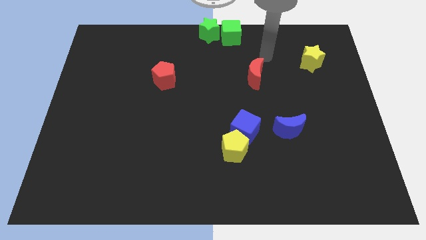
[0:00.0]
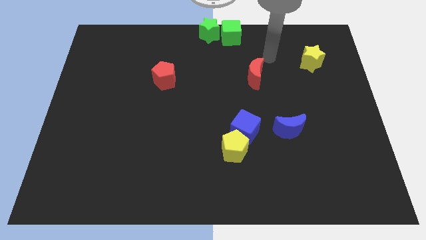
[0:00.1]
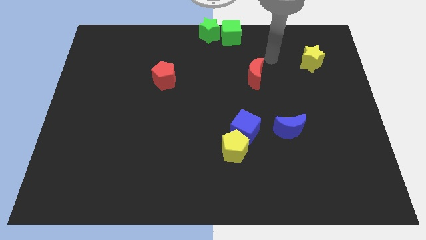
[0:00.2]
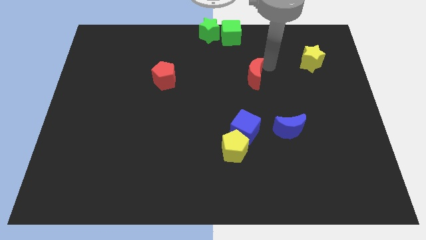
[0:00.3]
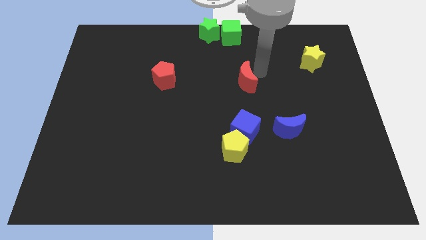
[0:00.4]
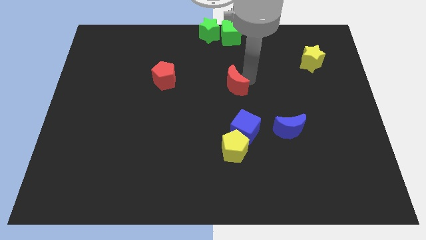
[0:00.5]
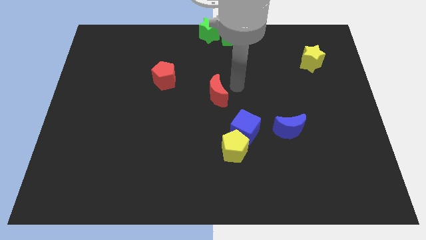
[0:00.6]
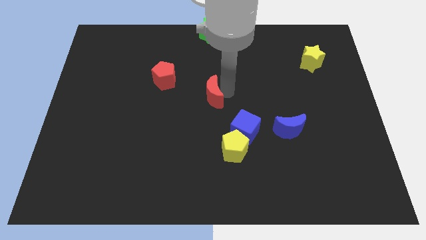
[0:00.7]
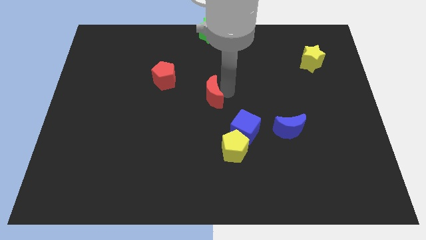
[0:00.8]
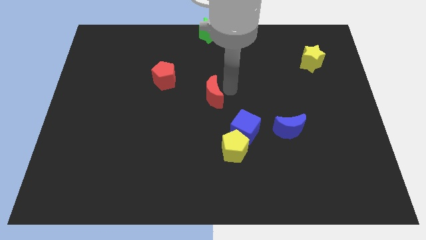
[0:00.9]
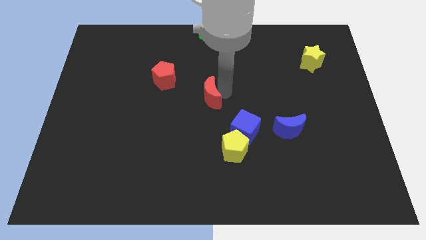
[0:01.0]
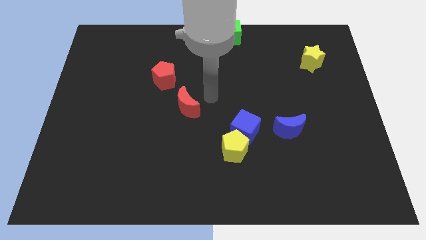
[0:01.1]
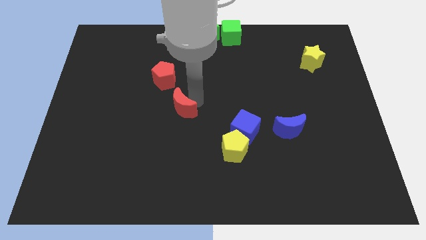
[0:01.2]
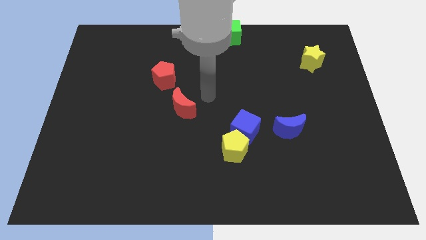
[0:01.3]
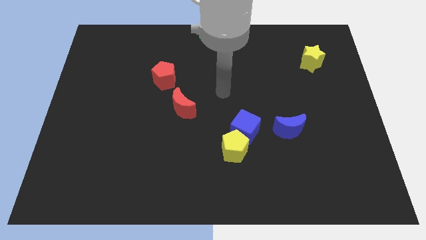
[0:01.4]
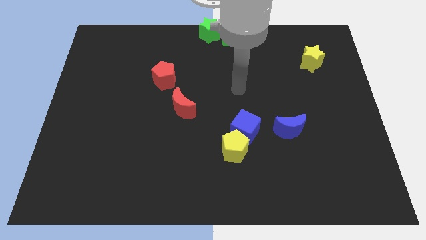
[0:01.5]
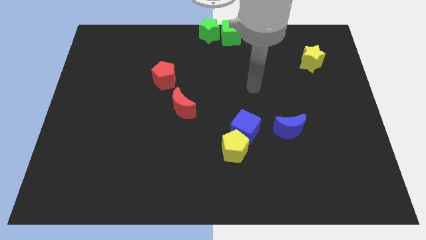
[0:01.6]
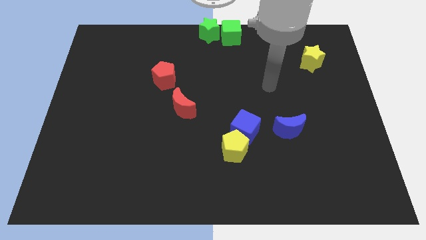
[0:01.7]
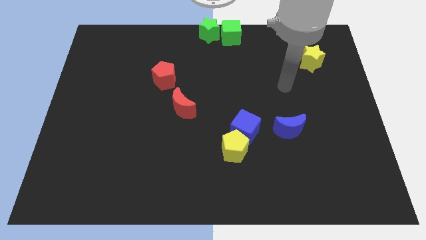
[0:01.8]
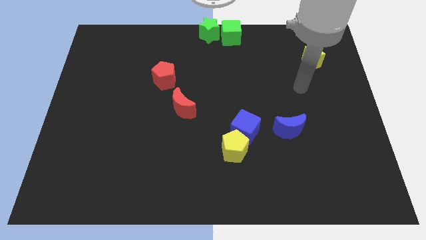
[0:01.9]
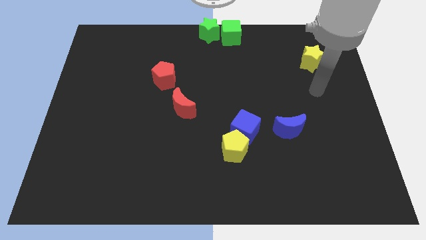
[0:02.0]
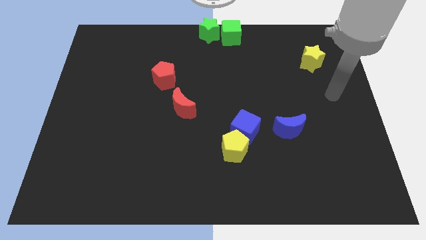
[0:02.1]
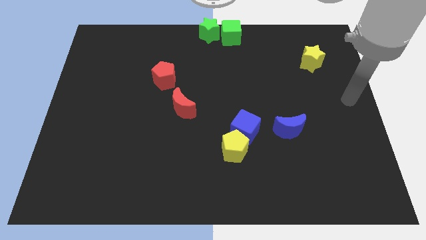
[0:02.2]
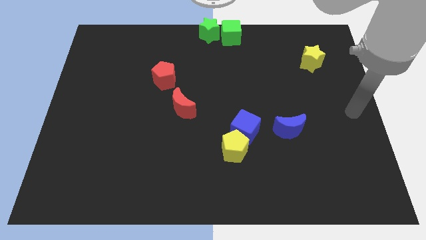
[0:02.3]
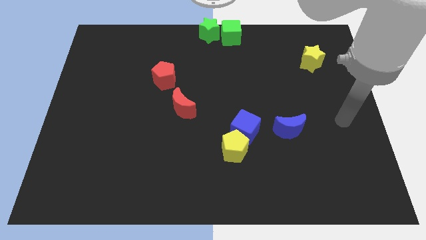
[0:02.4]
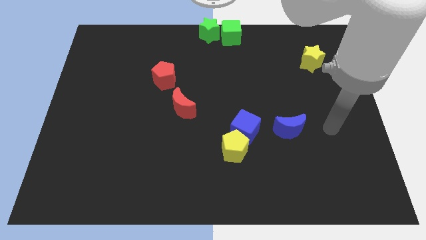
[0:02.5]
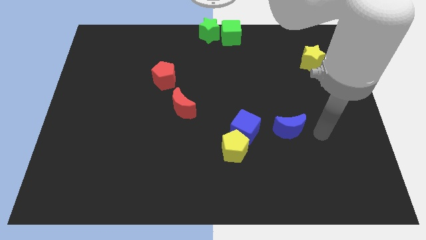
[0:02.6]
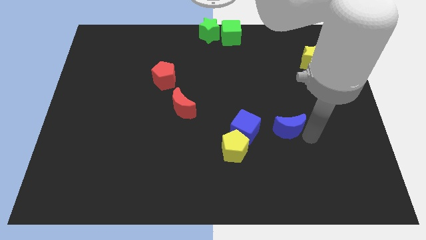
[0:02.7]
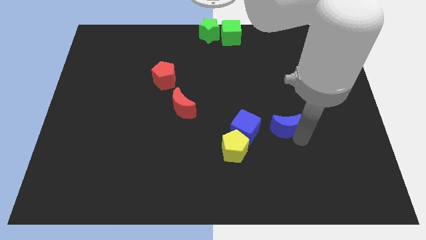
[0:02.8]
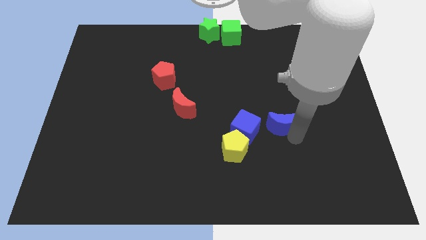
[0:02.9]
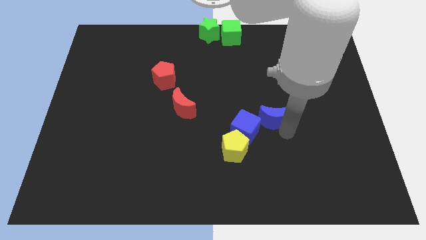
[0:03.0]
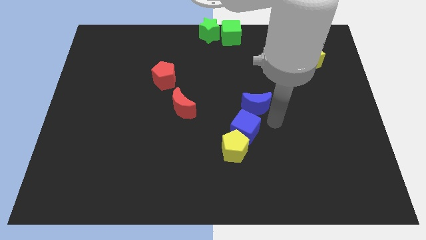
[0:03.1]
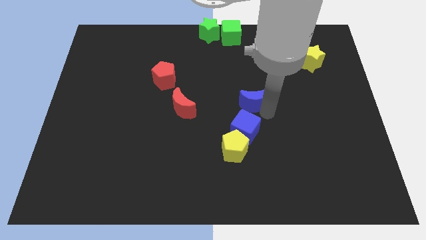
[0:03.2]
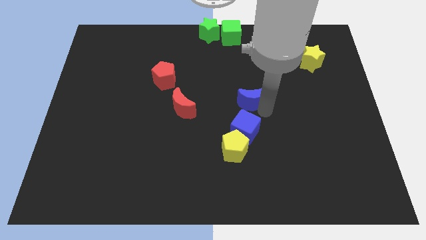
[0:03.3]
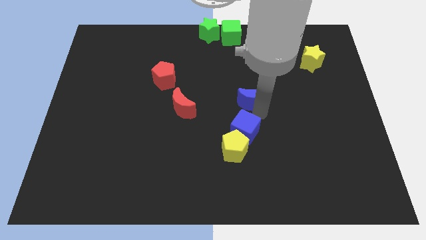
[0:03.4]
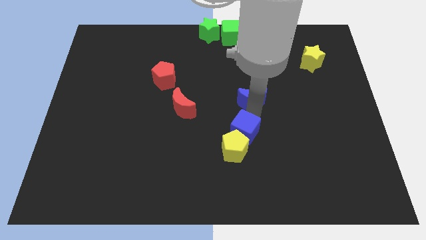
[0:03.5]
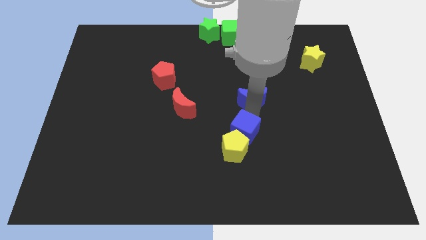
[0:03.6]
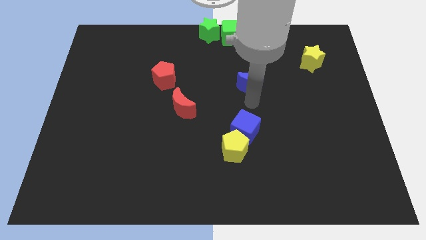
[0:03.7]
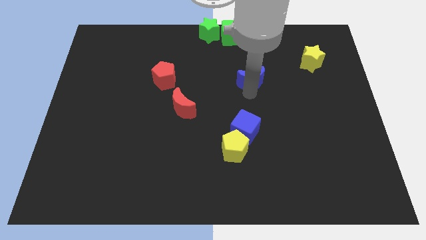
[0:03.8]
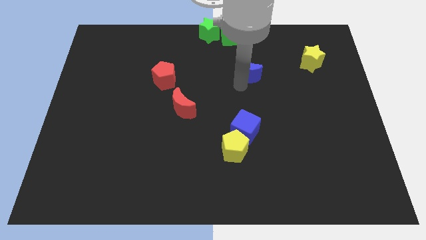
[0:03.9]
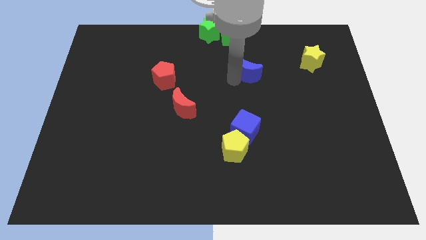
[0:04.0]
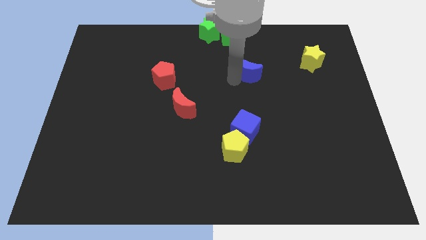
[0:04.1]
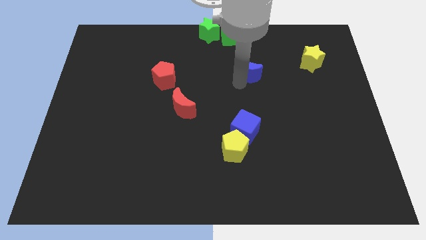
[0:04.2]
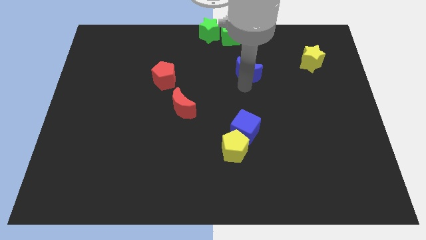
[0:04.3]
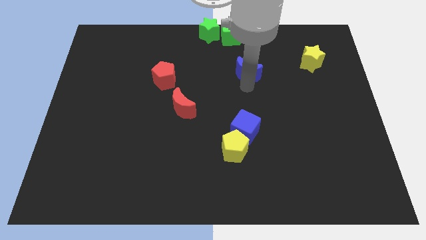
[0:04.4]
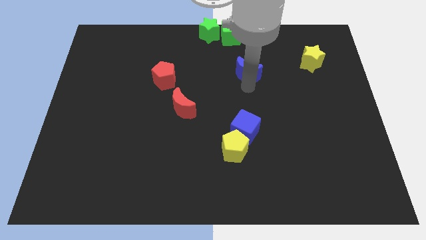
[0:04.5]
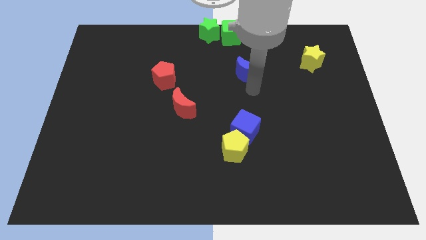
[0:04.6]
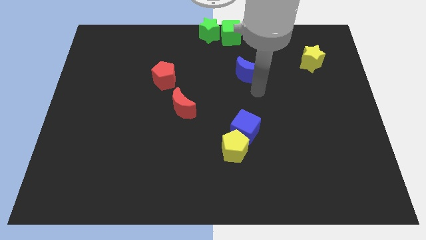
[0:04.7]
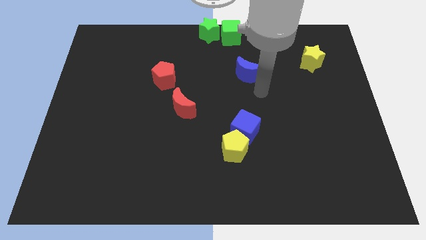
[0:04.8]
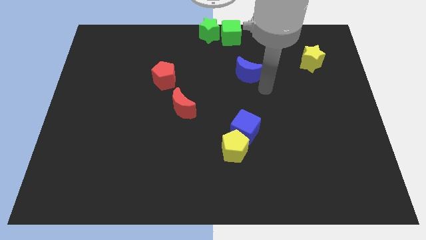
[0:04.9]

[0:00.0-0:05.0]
move the blue crescent close to the red pentagon

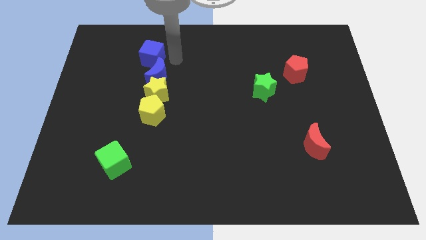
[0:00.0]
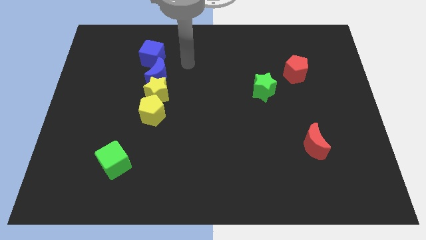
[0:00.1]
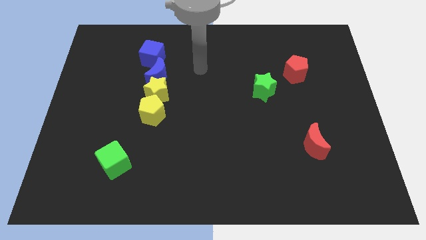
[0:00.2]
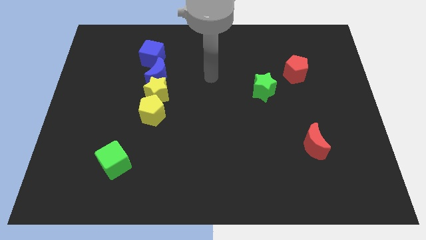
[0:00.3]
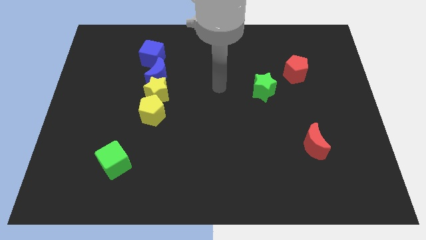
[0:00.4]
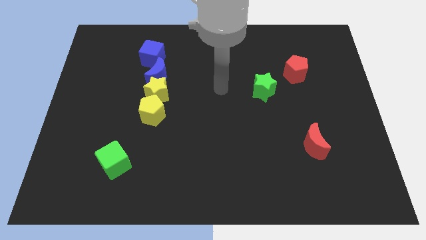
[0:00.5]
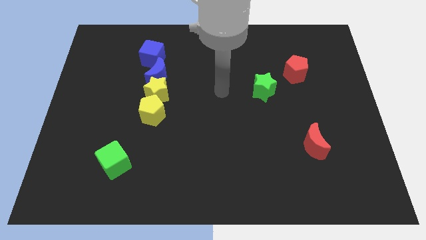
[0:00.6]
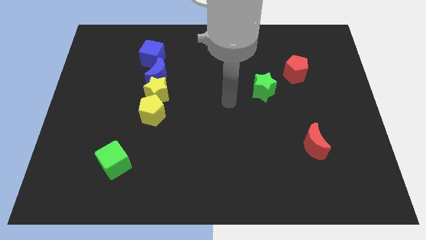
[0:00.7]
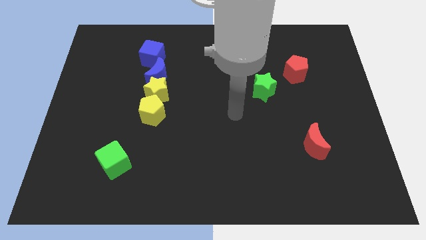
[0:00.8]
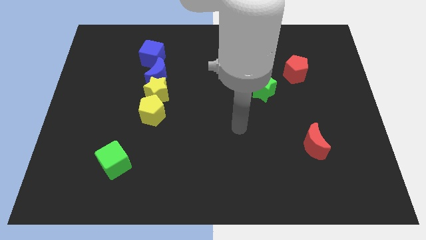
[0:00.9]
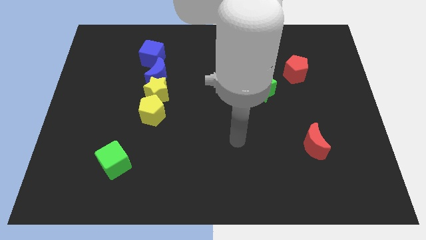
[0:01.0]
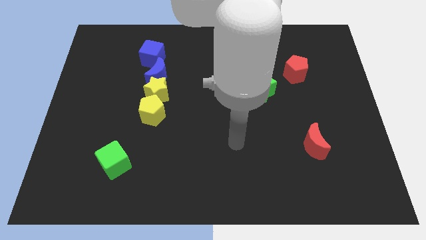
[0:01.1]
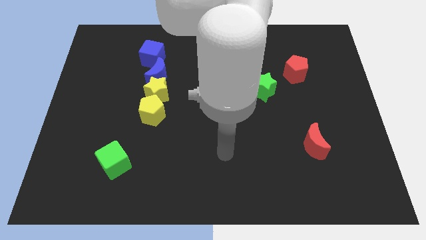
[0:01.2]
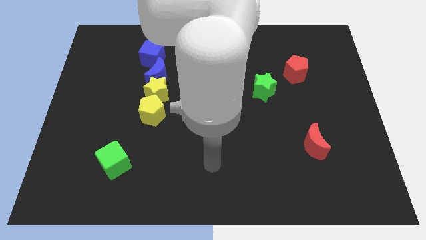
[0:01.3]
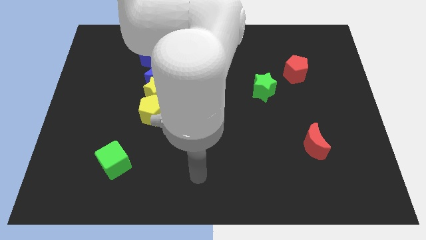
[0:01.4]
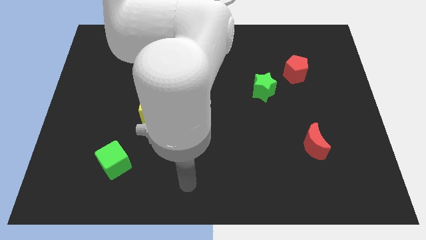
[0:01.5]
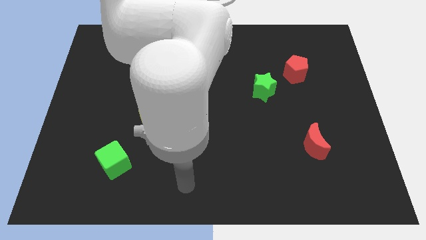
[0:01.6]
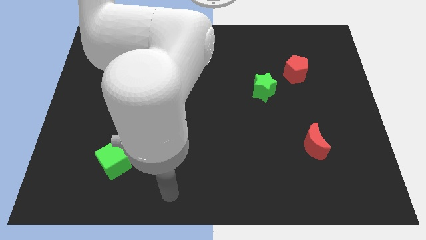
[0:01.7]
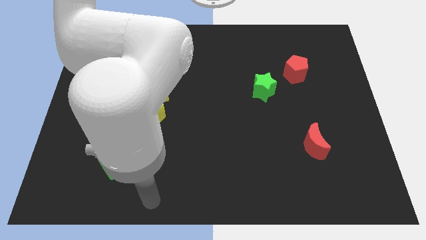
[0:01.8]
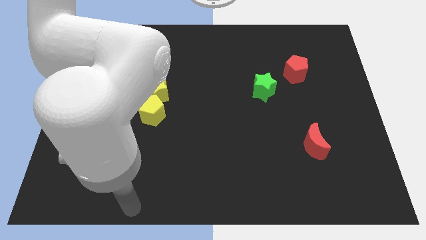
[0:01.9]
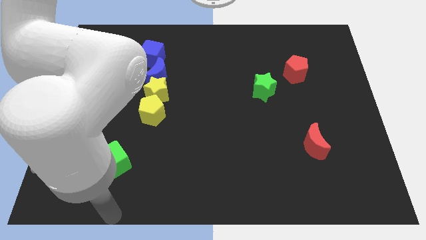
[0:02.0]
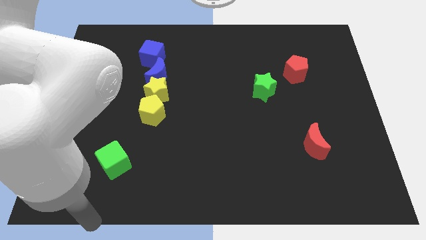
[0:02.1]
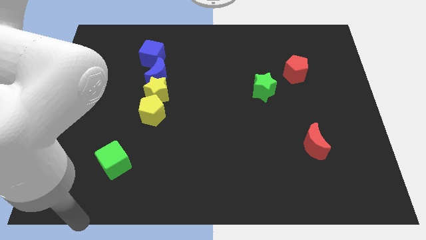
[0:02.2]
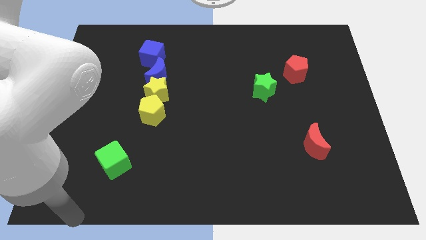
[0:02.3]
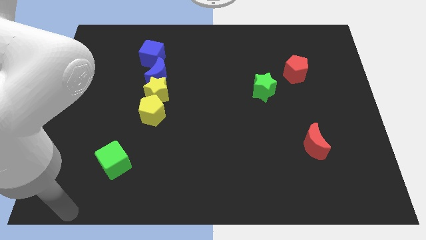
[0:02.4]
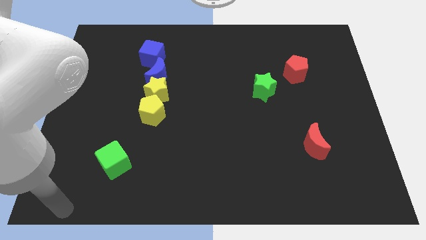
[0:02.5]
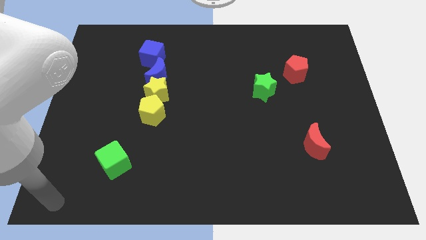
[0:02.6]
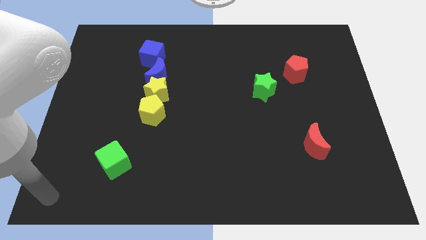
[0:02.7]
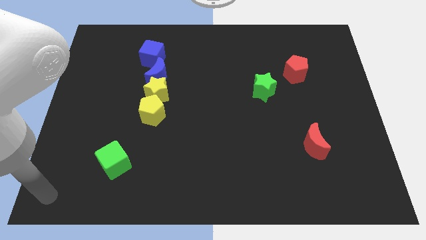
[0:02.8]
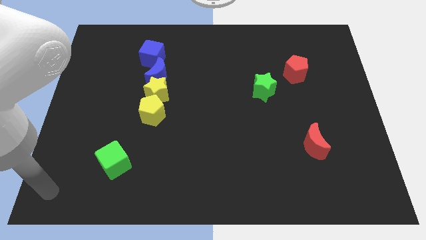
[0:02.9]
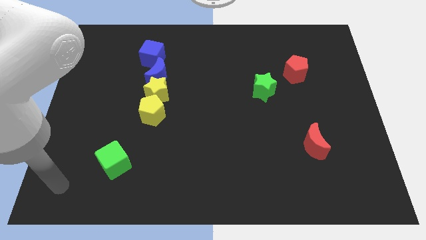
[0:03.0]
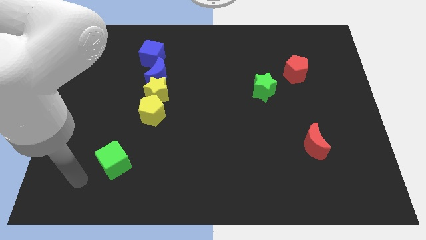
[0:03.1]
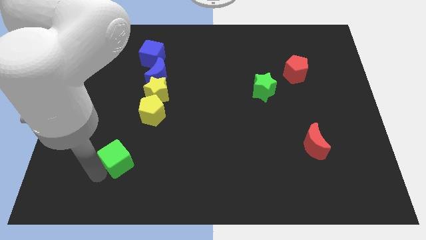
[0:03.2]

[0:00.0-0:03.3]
touch the left side of the green cube

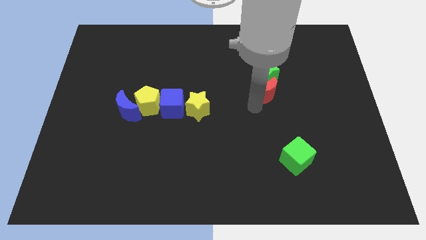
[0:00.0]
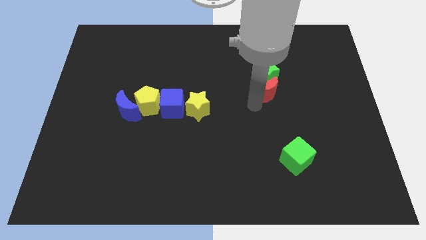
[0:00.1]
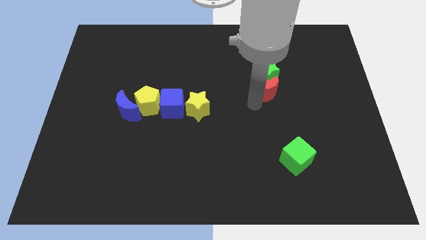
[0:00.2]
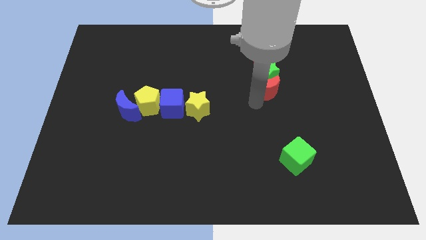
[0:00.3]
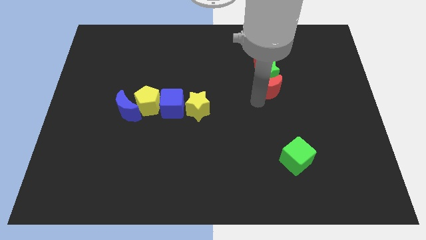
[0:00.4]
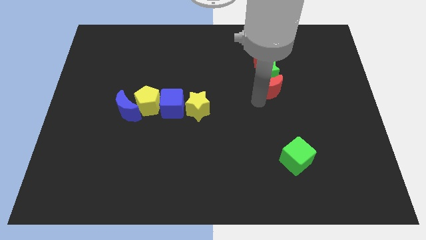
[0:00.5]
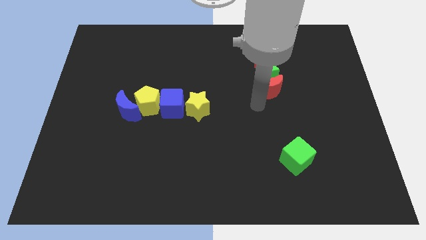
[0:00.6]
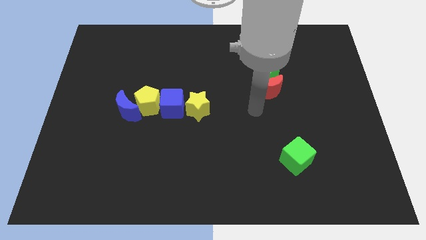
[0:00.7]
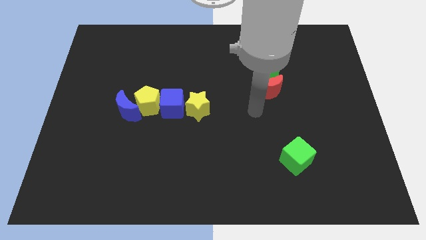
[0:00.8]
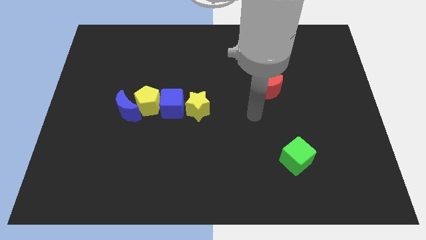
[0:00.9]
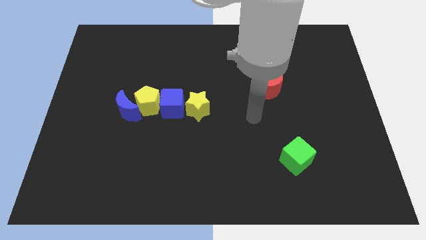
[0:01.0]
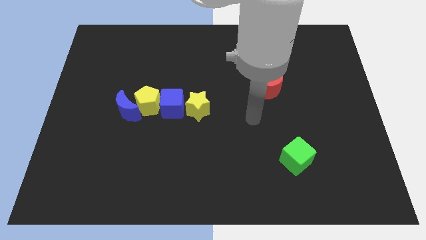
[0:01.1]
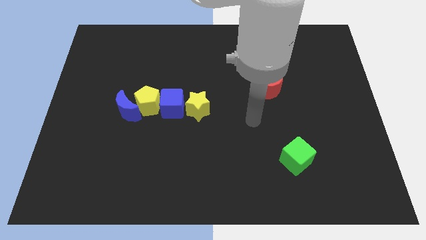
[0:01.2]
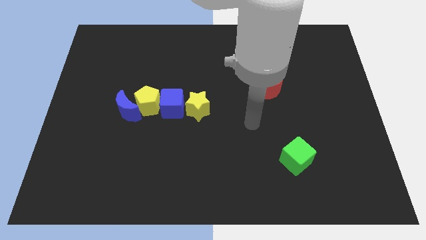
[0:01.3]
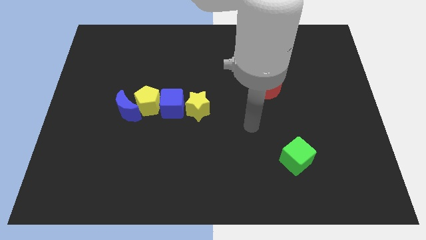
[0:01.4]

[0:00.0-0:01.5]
place the red crescent bottom to the green star
